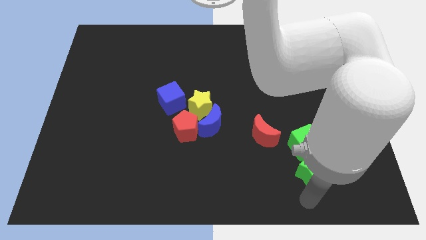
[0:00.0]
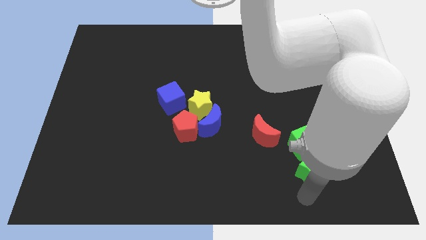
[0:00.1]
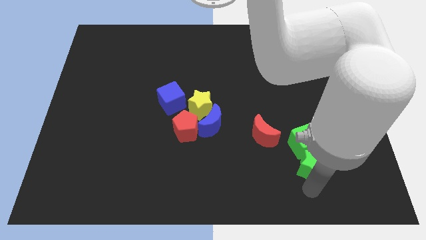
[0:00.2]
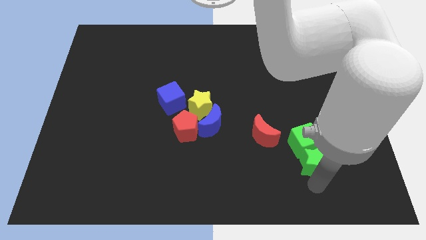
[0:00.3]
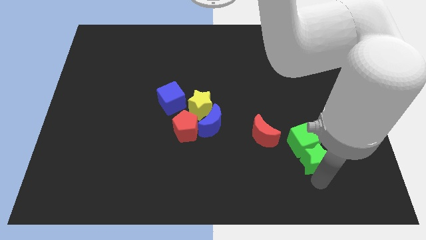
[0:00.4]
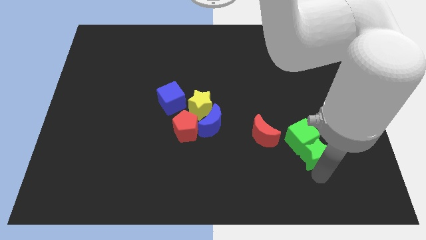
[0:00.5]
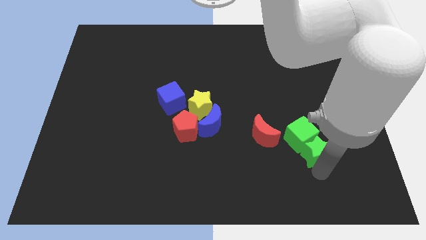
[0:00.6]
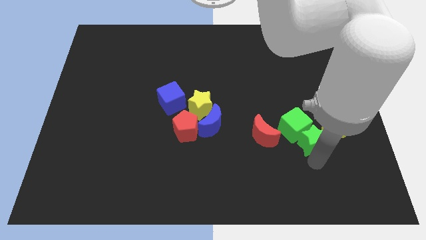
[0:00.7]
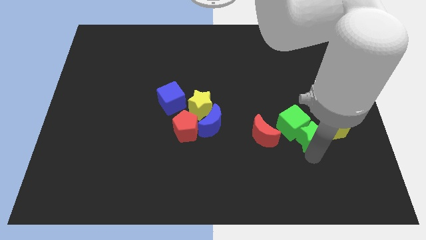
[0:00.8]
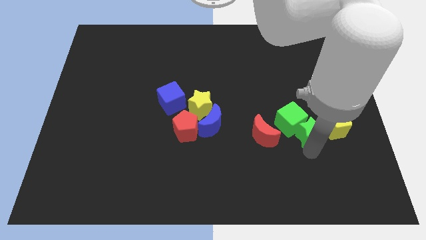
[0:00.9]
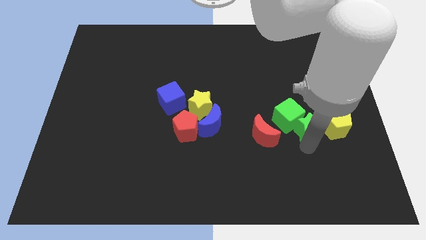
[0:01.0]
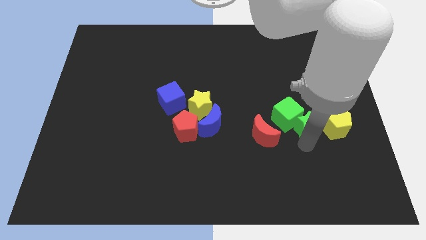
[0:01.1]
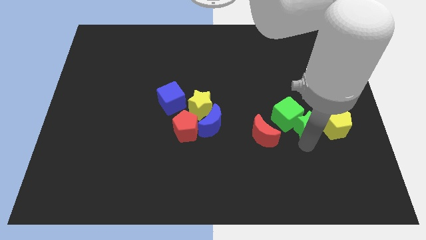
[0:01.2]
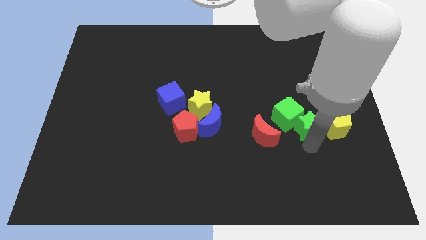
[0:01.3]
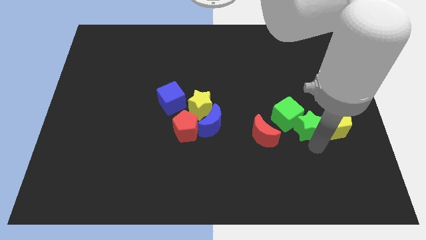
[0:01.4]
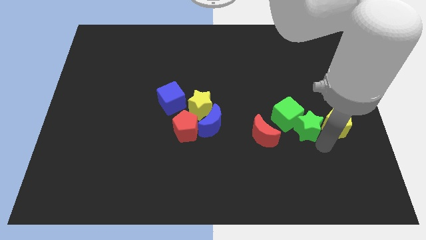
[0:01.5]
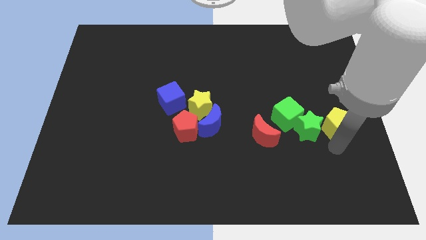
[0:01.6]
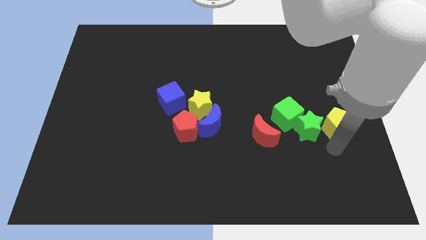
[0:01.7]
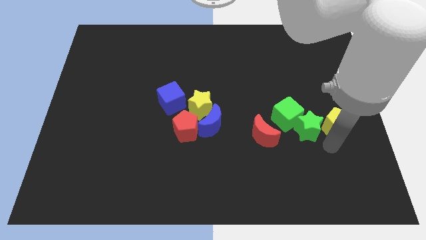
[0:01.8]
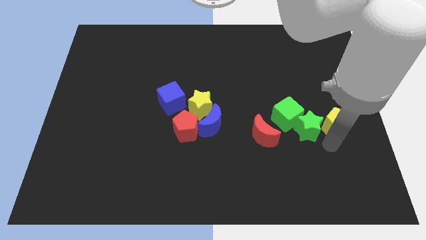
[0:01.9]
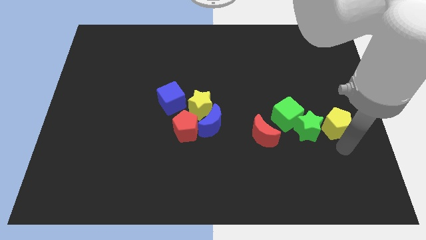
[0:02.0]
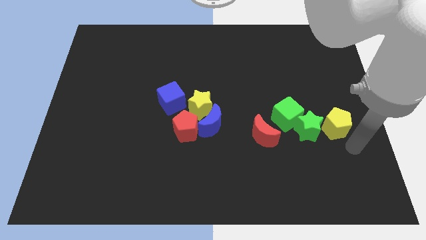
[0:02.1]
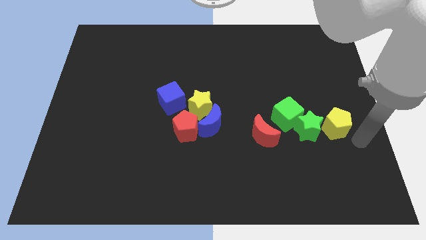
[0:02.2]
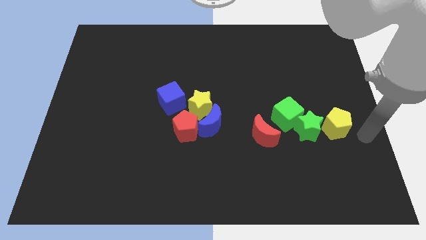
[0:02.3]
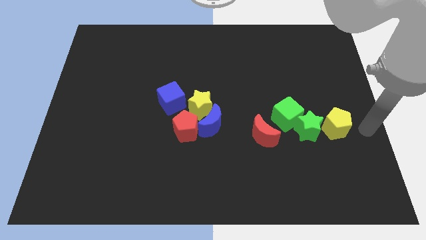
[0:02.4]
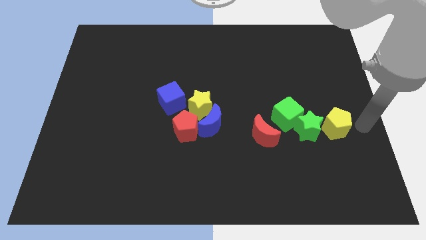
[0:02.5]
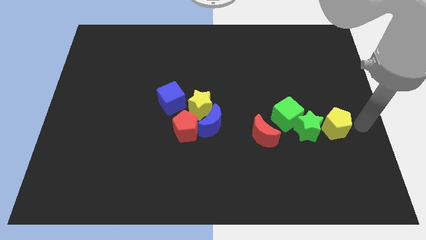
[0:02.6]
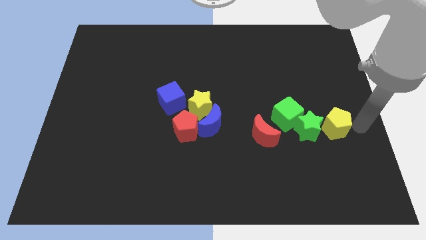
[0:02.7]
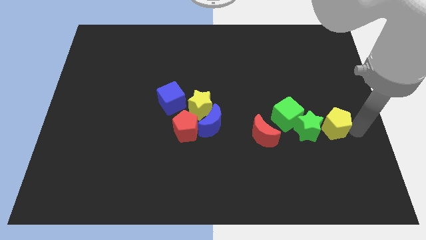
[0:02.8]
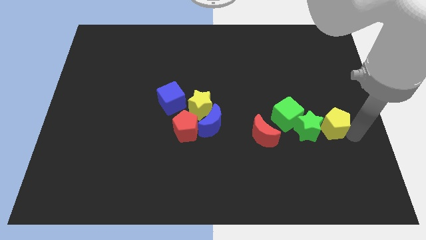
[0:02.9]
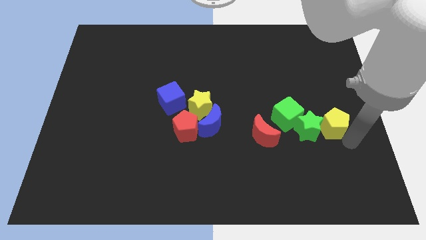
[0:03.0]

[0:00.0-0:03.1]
move the green blocks slightly upwards of the board

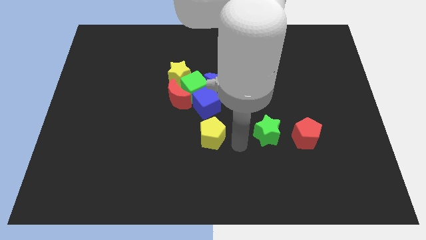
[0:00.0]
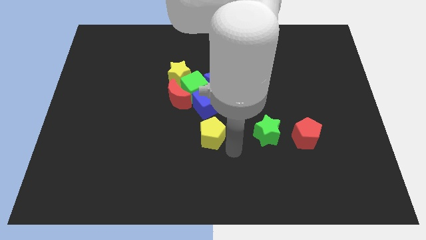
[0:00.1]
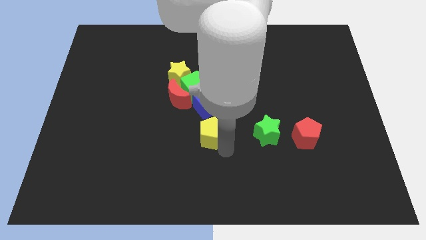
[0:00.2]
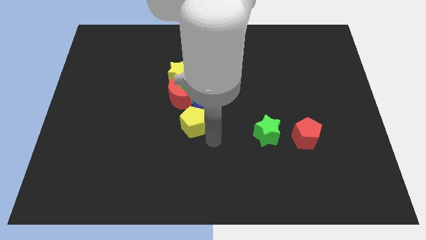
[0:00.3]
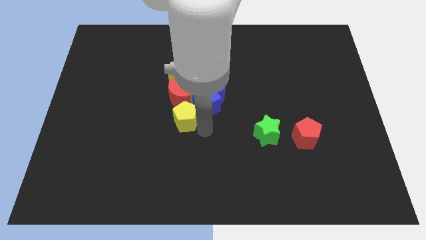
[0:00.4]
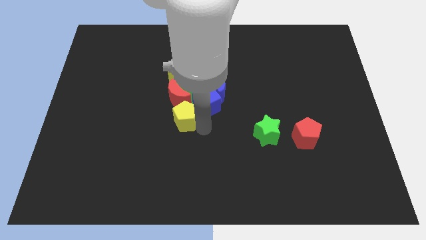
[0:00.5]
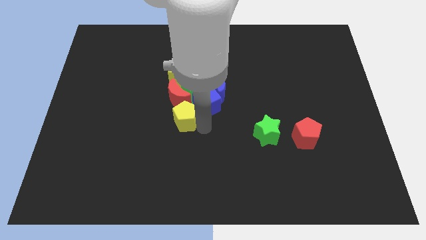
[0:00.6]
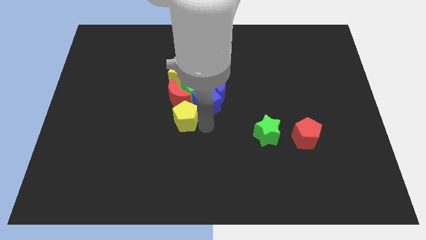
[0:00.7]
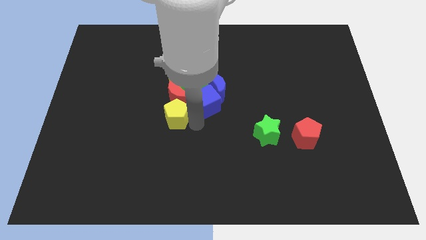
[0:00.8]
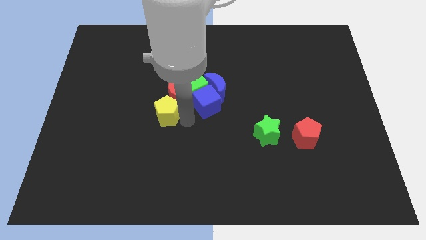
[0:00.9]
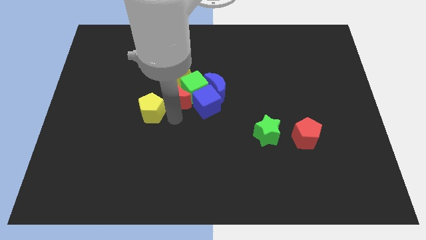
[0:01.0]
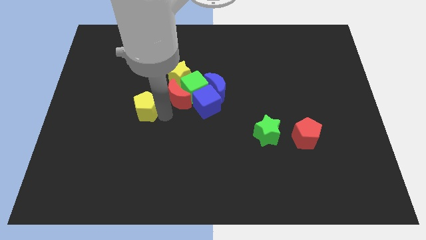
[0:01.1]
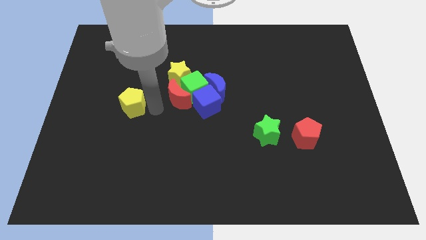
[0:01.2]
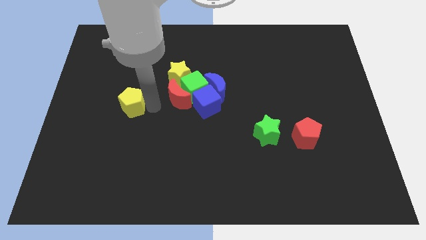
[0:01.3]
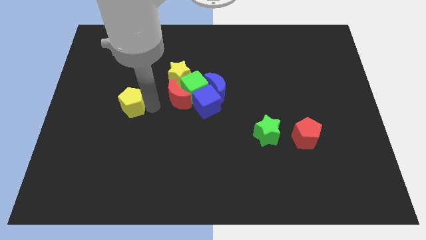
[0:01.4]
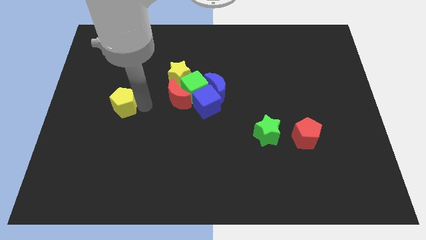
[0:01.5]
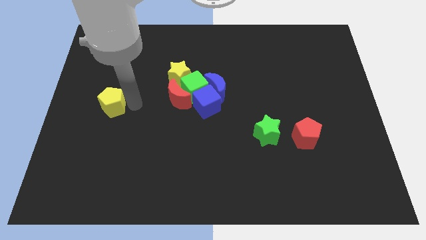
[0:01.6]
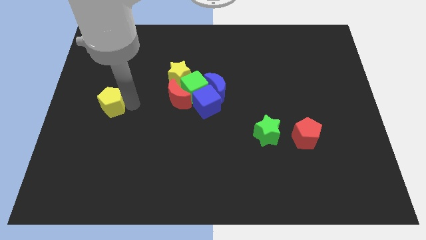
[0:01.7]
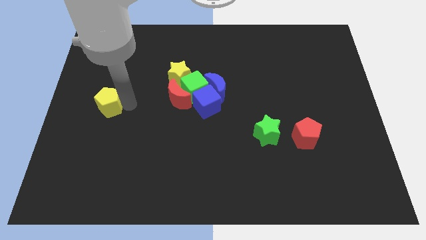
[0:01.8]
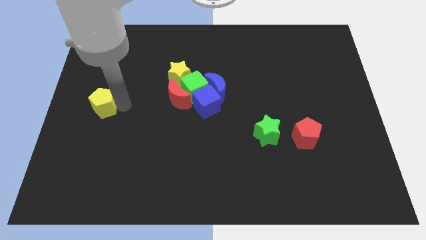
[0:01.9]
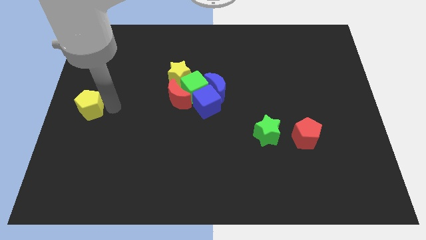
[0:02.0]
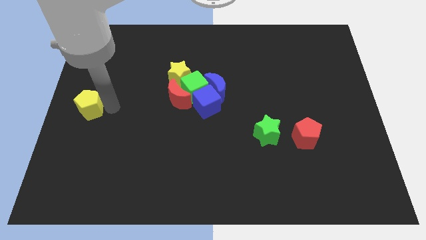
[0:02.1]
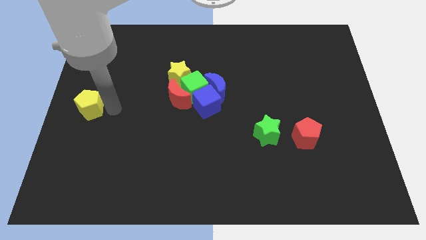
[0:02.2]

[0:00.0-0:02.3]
place the yellow pentagon to the horizontal left side of the blue cube

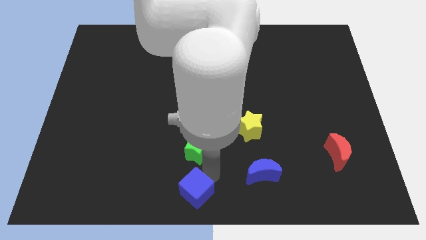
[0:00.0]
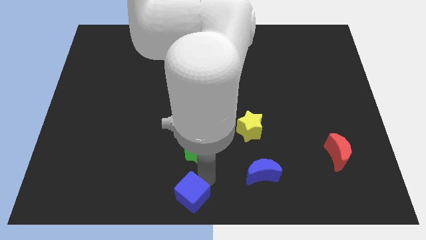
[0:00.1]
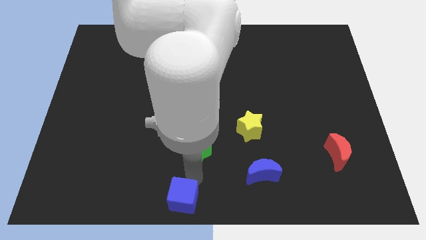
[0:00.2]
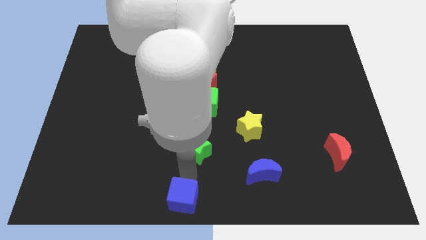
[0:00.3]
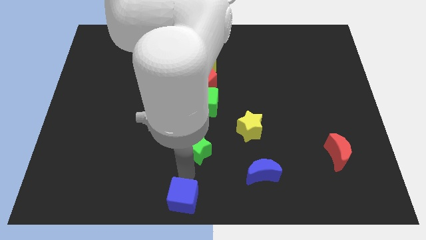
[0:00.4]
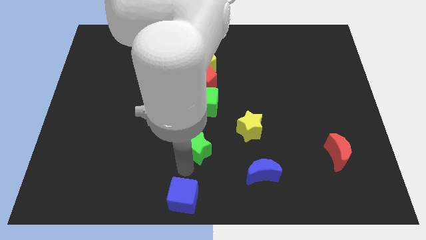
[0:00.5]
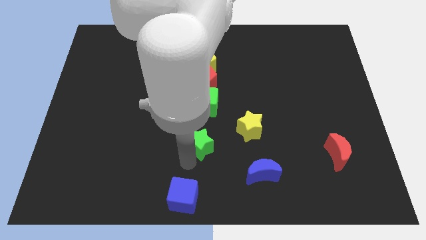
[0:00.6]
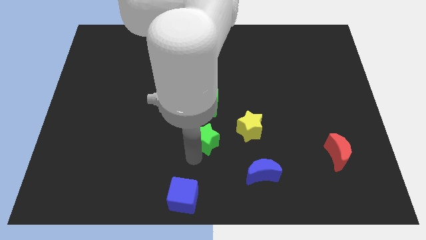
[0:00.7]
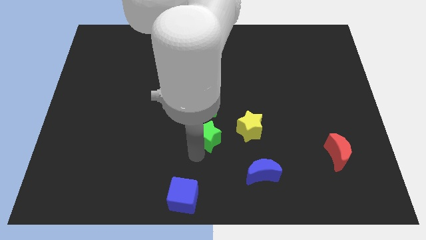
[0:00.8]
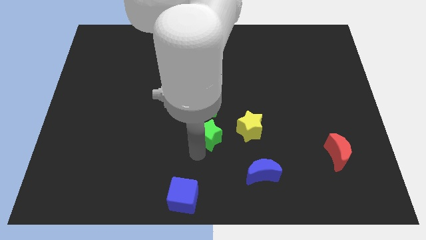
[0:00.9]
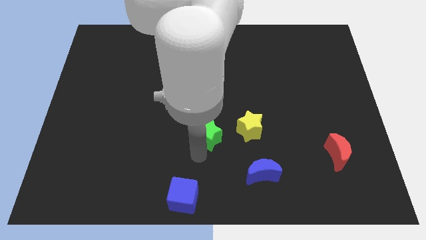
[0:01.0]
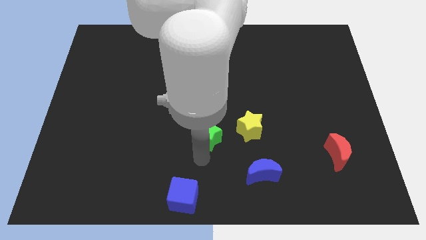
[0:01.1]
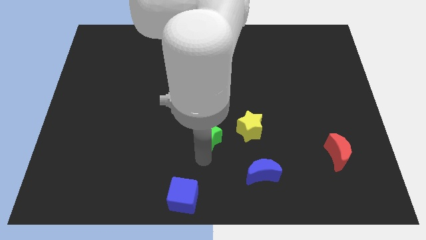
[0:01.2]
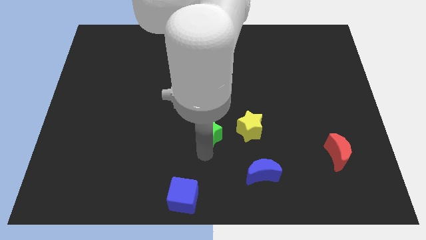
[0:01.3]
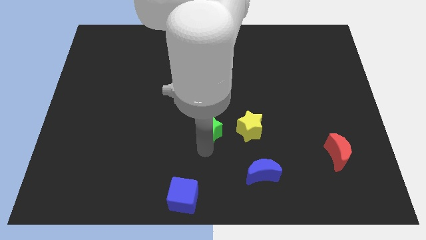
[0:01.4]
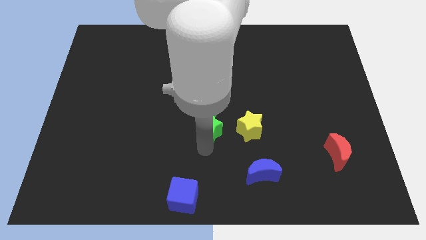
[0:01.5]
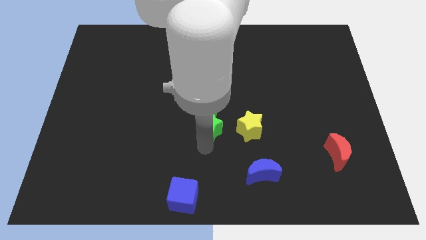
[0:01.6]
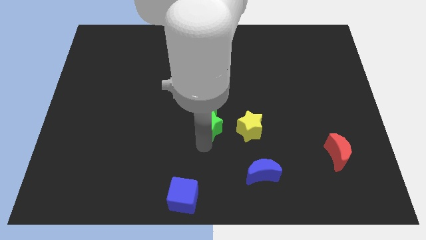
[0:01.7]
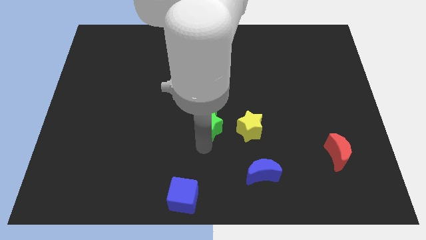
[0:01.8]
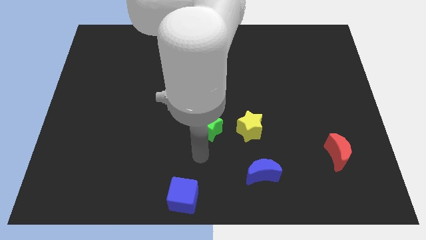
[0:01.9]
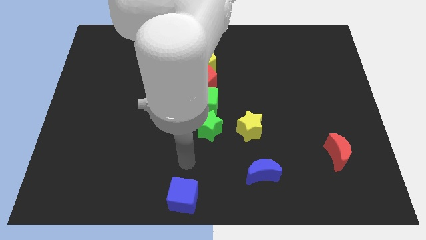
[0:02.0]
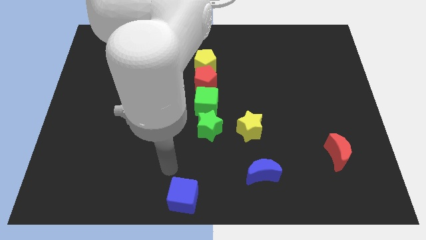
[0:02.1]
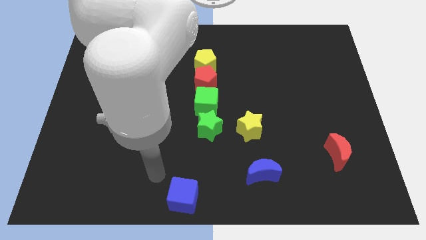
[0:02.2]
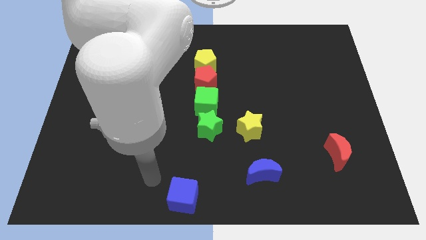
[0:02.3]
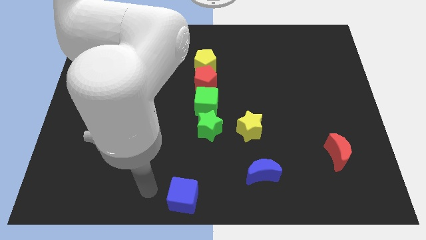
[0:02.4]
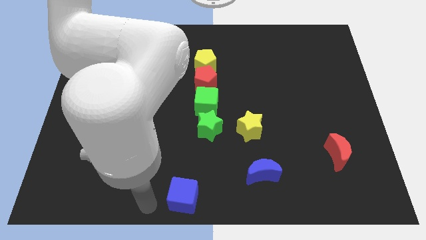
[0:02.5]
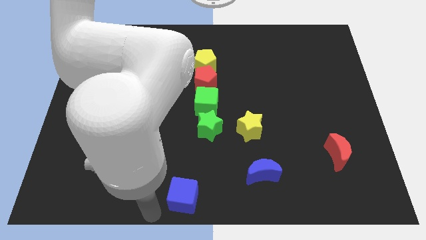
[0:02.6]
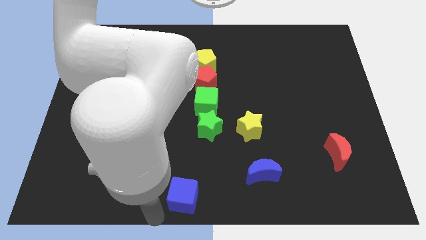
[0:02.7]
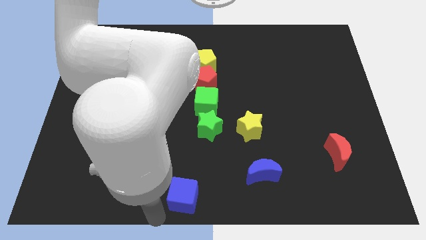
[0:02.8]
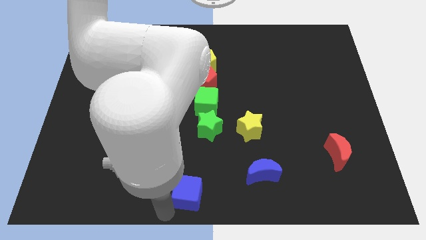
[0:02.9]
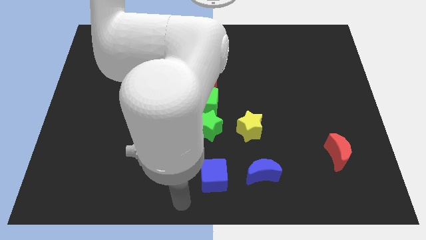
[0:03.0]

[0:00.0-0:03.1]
push the green star into the green cube

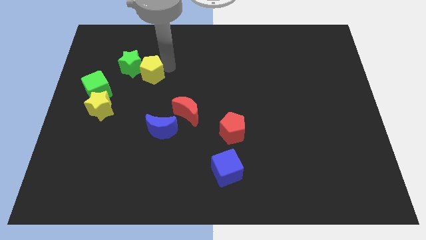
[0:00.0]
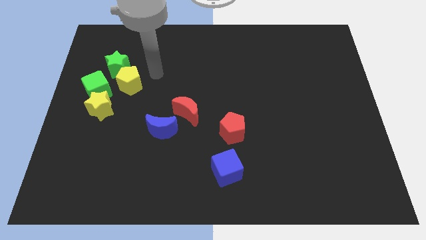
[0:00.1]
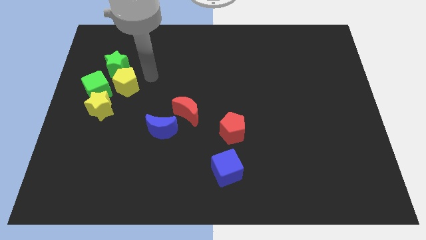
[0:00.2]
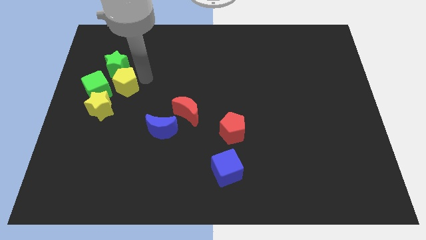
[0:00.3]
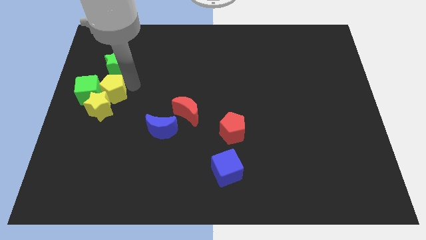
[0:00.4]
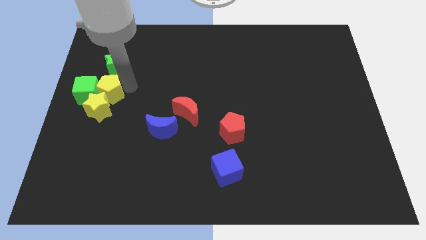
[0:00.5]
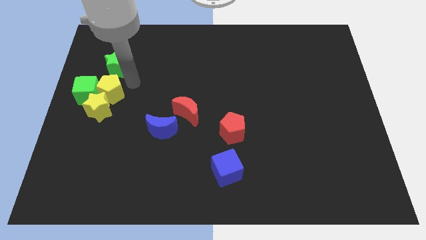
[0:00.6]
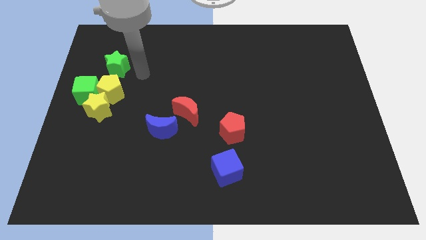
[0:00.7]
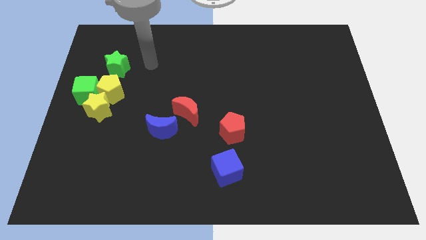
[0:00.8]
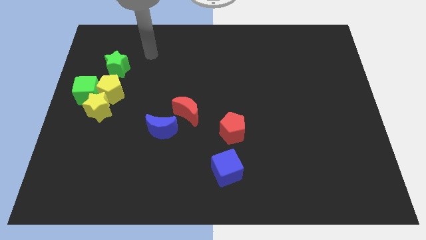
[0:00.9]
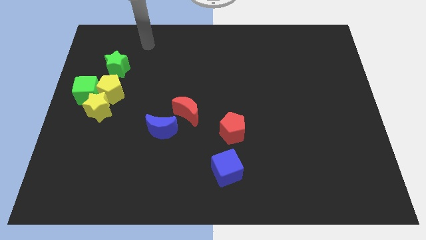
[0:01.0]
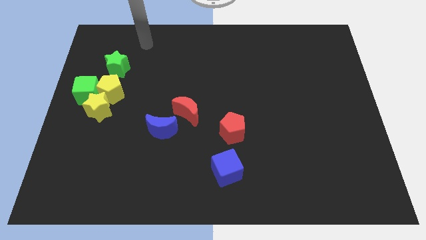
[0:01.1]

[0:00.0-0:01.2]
slide yellow pentagon into the green cube and the yellow star
